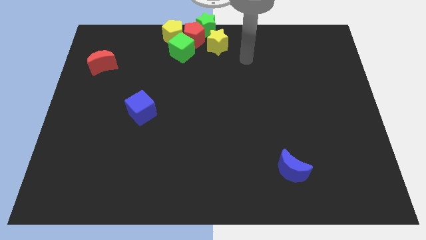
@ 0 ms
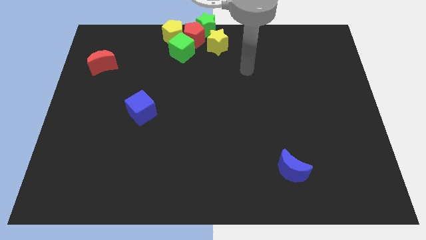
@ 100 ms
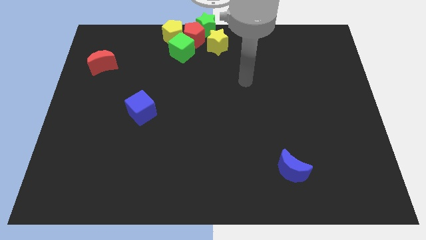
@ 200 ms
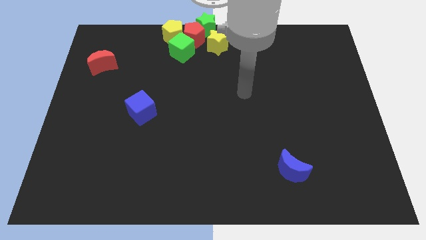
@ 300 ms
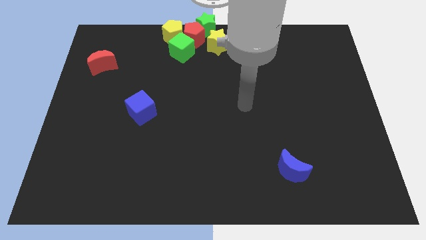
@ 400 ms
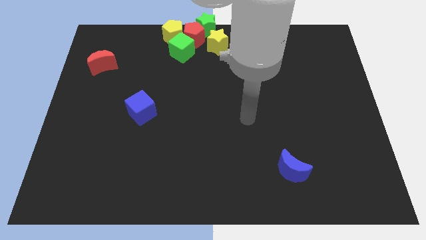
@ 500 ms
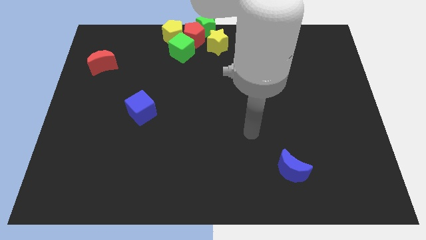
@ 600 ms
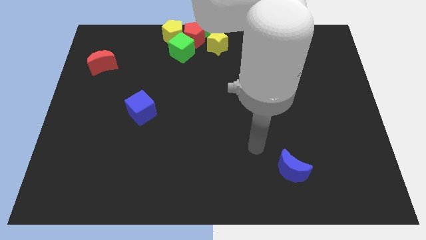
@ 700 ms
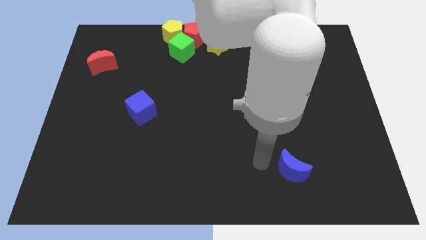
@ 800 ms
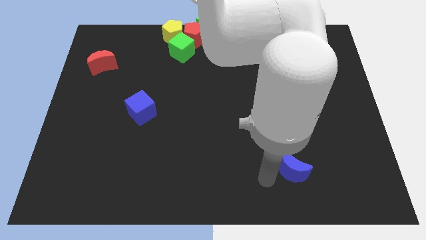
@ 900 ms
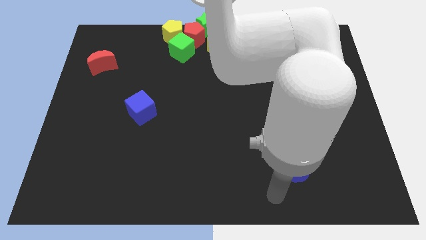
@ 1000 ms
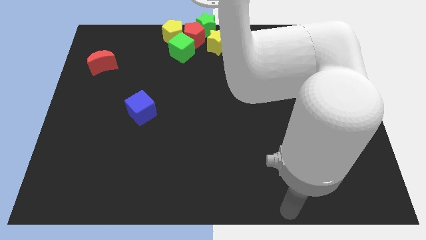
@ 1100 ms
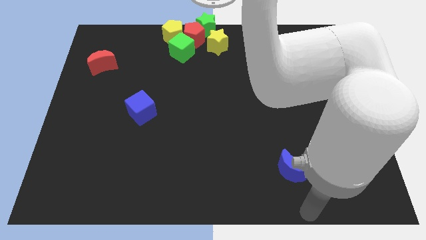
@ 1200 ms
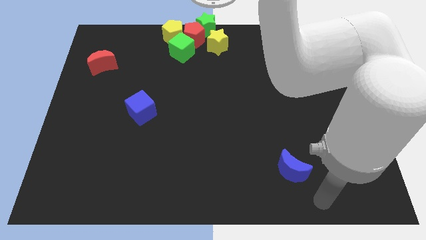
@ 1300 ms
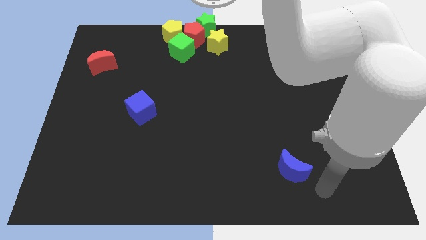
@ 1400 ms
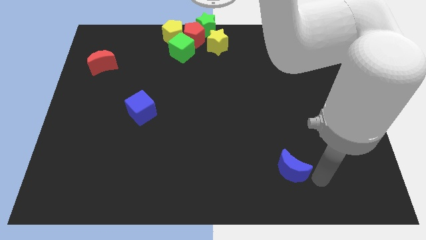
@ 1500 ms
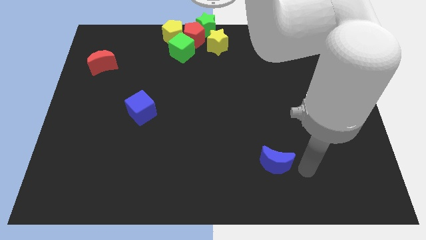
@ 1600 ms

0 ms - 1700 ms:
tap the blue crescent

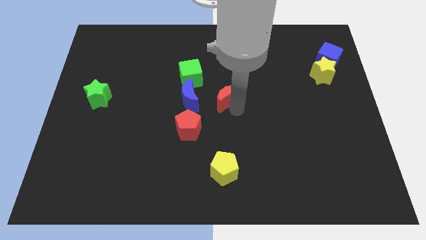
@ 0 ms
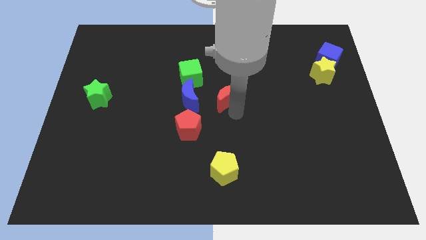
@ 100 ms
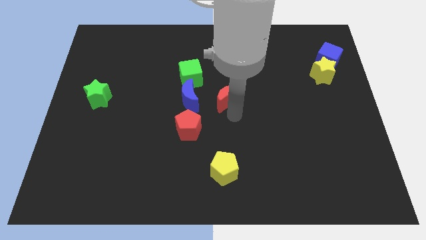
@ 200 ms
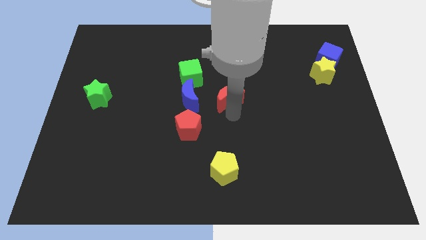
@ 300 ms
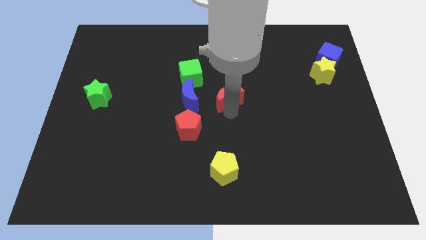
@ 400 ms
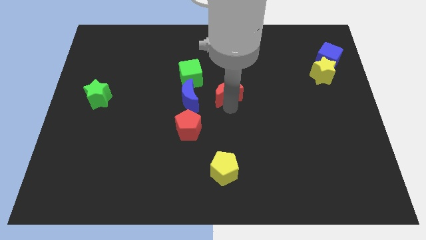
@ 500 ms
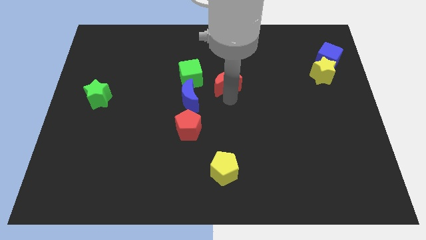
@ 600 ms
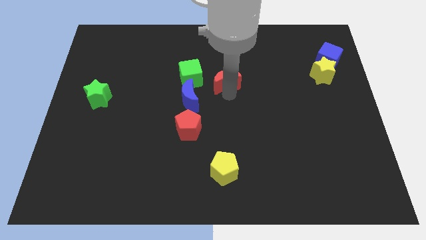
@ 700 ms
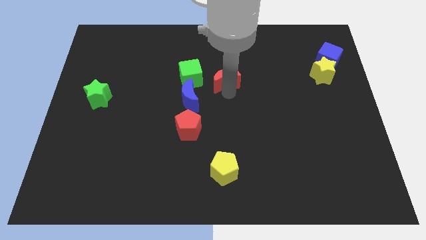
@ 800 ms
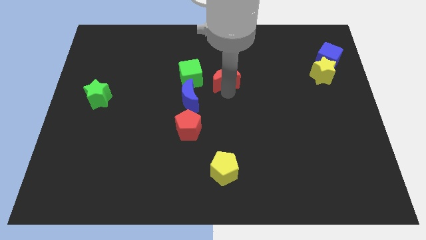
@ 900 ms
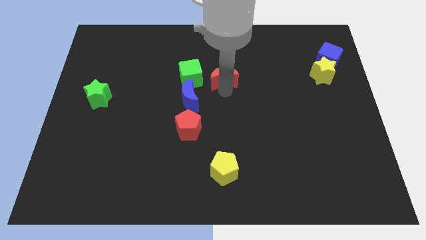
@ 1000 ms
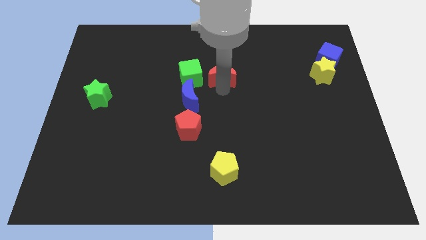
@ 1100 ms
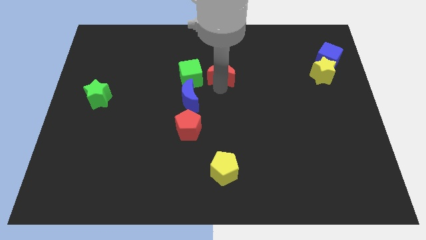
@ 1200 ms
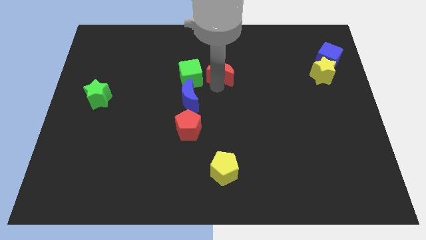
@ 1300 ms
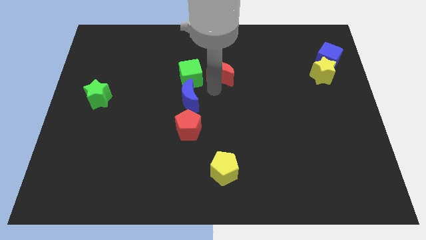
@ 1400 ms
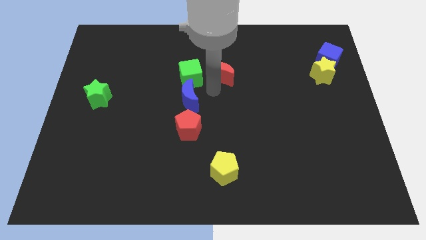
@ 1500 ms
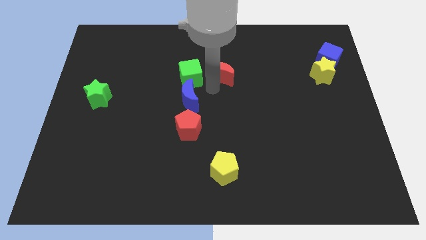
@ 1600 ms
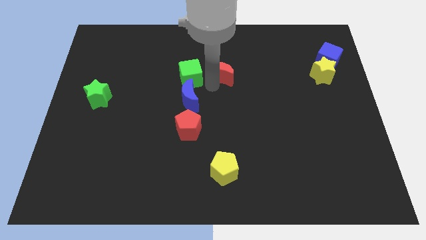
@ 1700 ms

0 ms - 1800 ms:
place red crescent beside the green cube

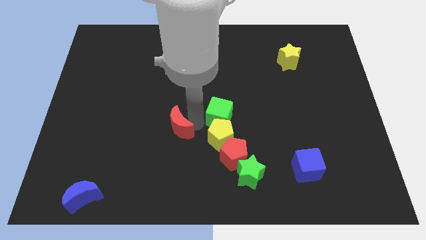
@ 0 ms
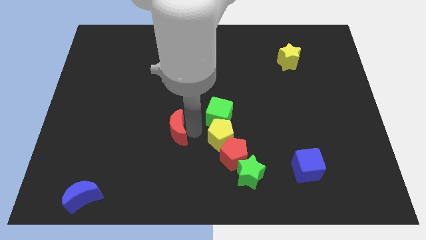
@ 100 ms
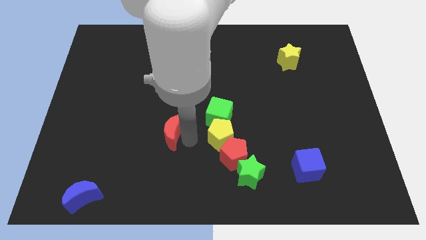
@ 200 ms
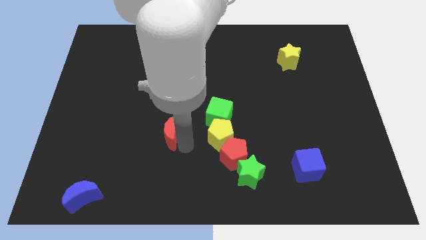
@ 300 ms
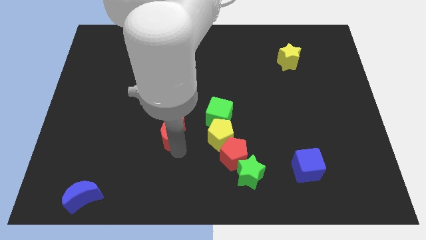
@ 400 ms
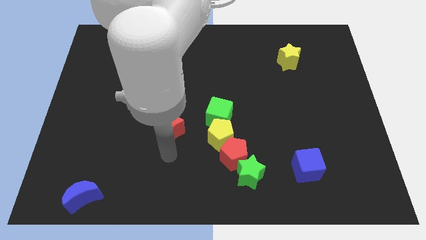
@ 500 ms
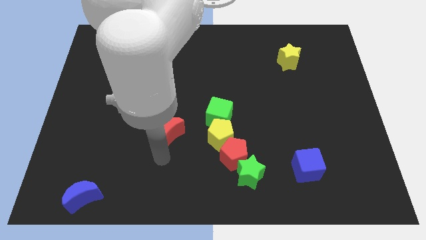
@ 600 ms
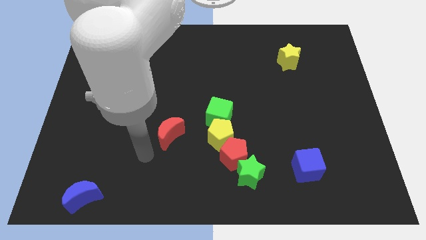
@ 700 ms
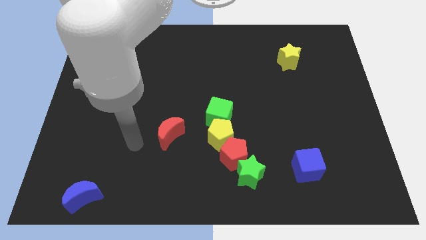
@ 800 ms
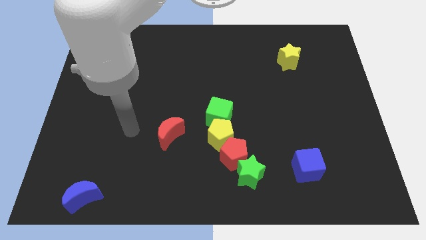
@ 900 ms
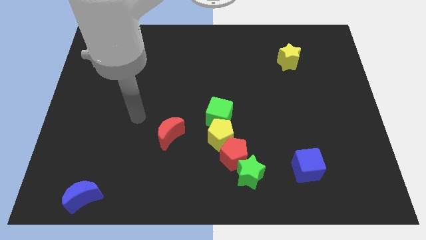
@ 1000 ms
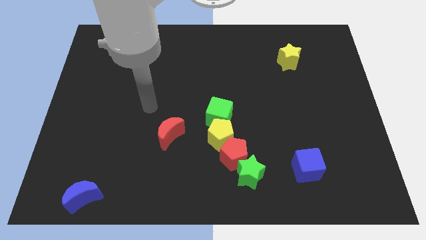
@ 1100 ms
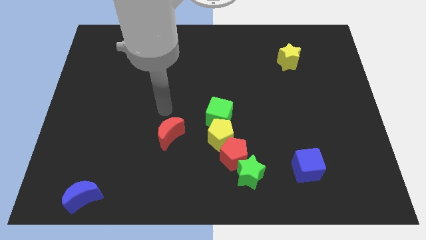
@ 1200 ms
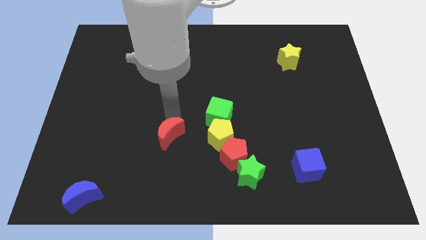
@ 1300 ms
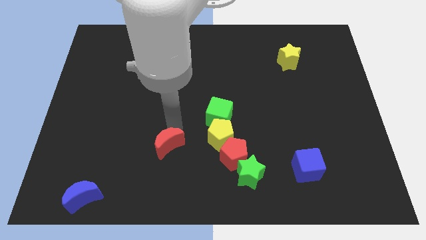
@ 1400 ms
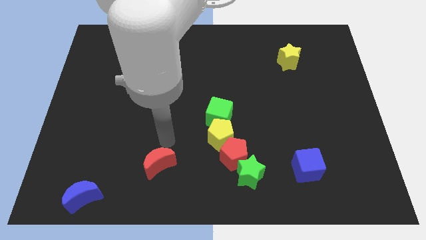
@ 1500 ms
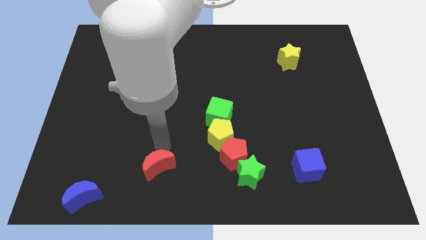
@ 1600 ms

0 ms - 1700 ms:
separate the red moon from the yellow pentagon

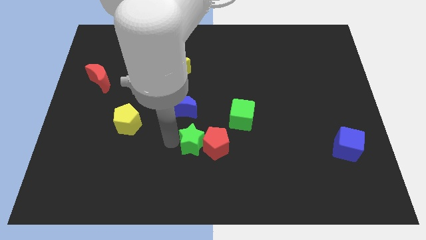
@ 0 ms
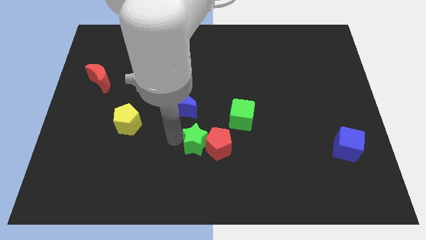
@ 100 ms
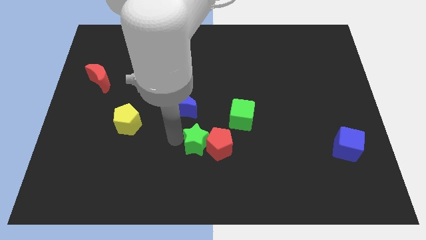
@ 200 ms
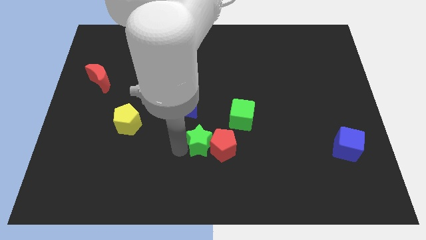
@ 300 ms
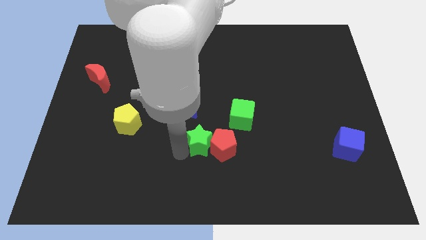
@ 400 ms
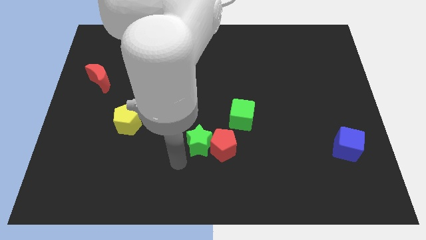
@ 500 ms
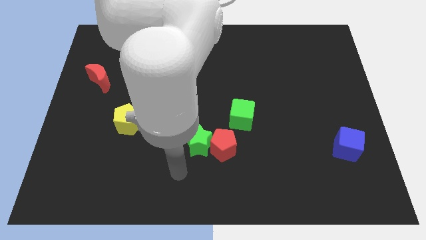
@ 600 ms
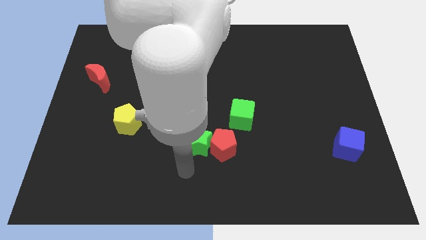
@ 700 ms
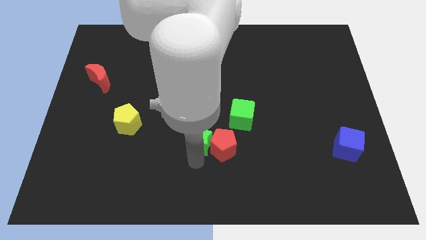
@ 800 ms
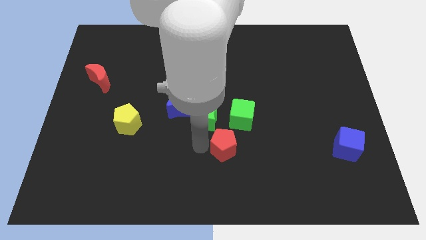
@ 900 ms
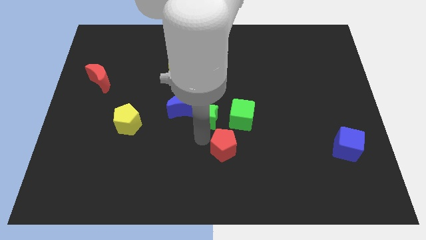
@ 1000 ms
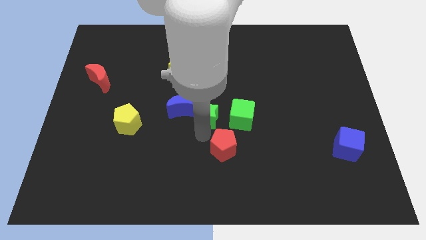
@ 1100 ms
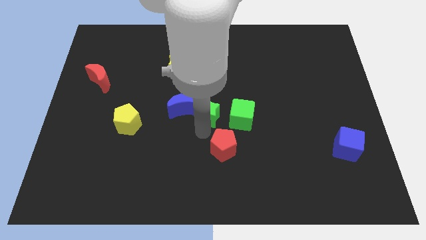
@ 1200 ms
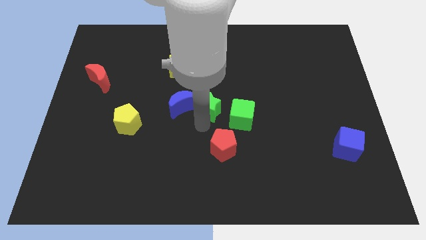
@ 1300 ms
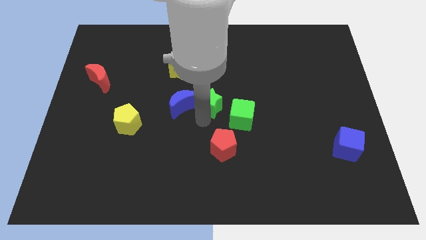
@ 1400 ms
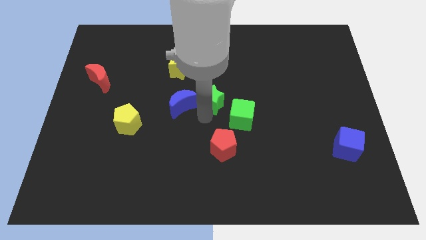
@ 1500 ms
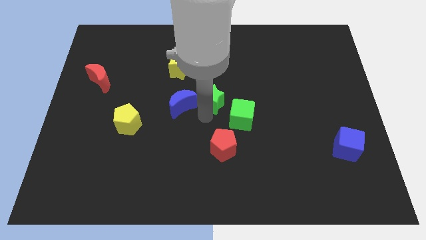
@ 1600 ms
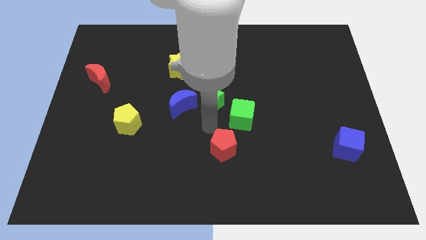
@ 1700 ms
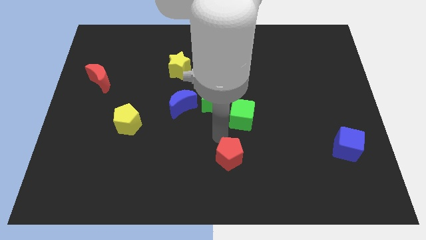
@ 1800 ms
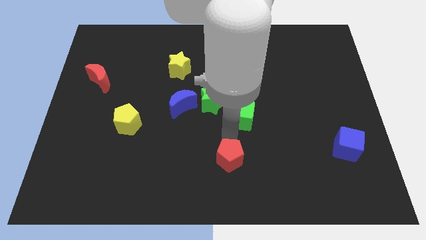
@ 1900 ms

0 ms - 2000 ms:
move the green star to the right of the blue moon

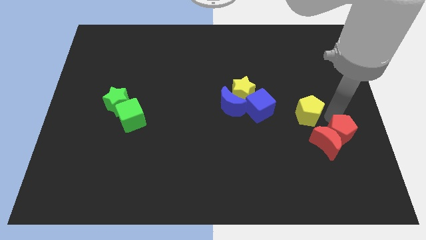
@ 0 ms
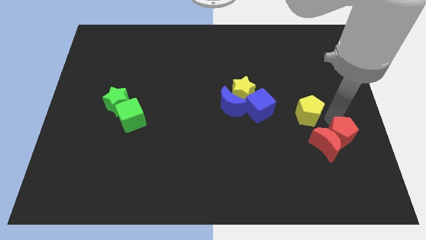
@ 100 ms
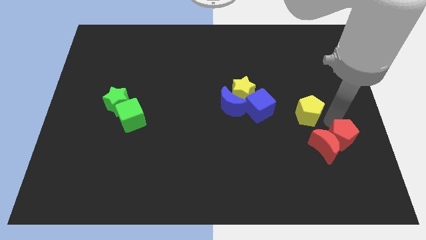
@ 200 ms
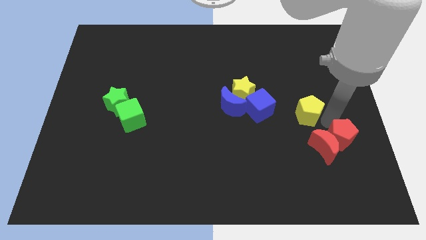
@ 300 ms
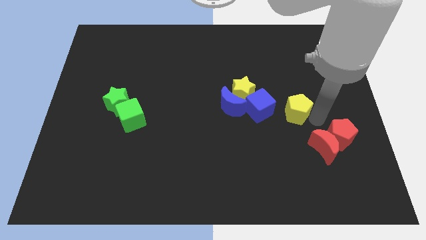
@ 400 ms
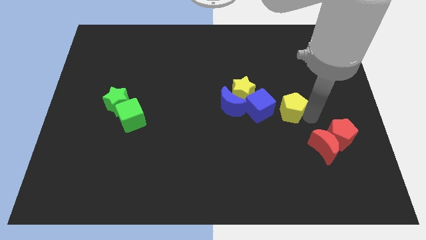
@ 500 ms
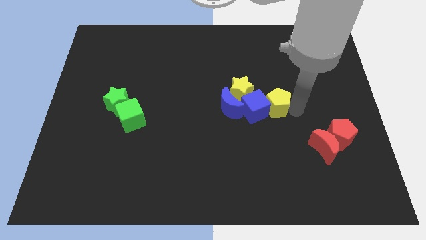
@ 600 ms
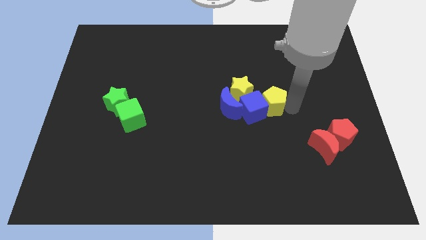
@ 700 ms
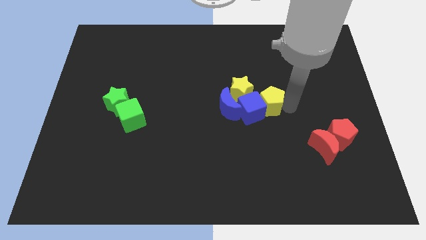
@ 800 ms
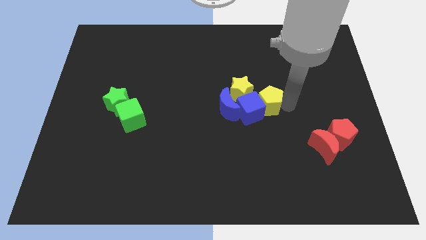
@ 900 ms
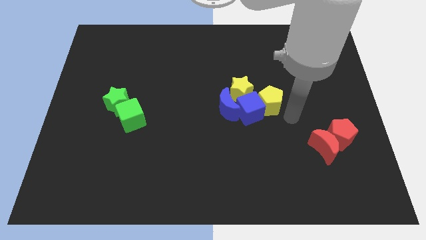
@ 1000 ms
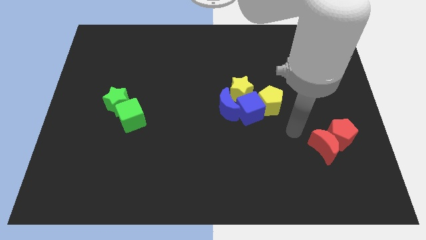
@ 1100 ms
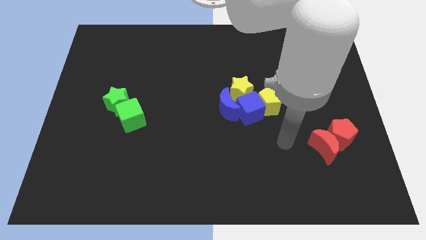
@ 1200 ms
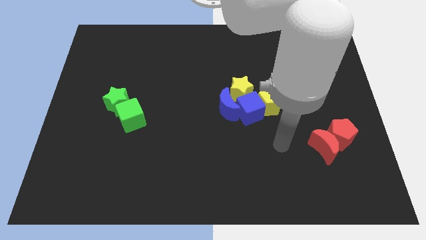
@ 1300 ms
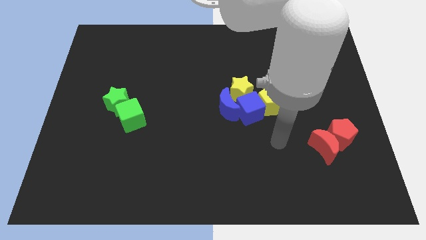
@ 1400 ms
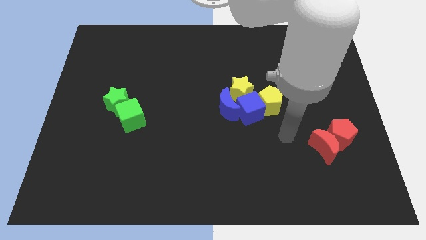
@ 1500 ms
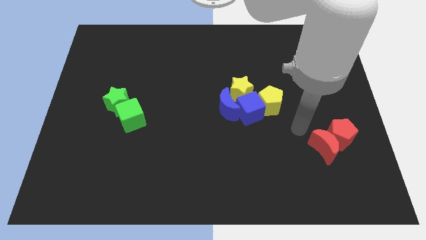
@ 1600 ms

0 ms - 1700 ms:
move the yellow pentagon right side to the blue cube
